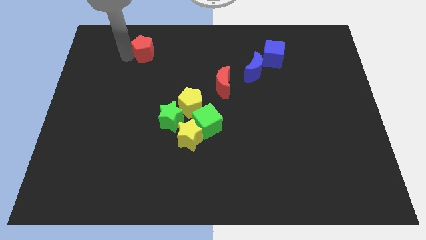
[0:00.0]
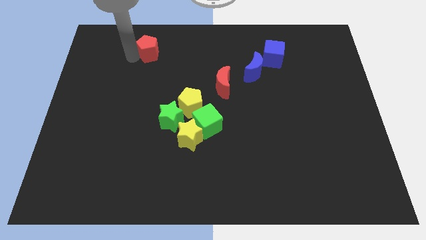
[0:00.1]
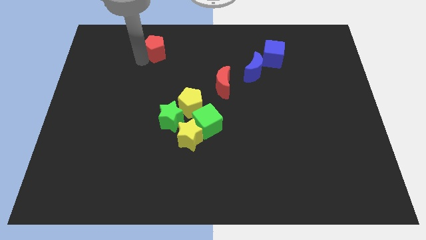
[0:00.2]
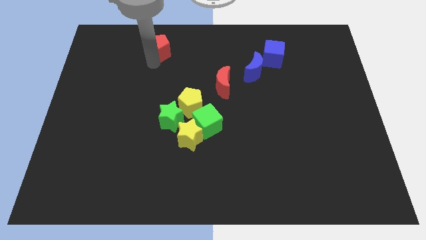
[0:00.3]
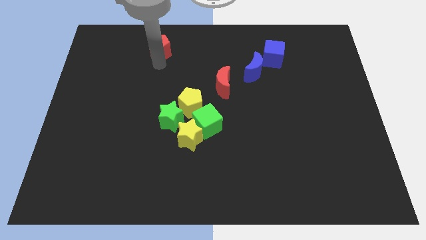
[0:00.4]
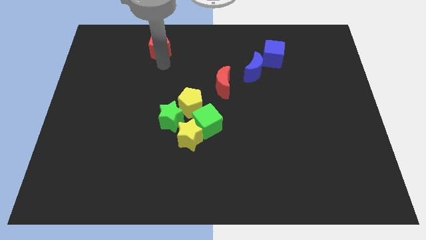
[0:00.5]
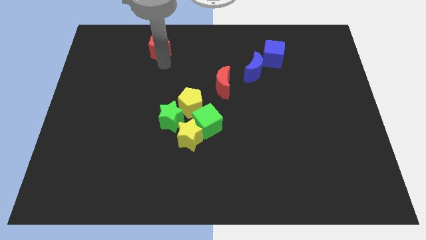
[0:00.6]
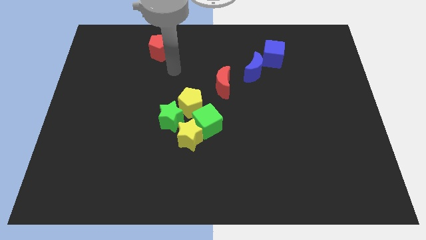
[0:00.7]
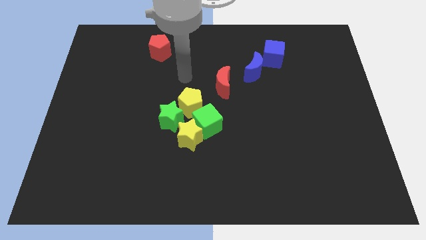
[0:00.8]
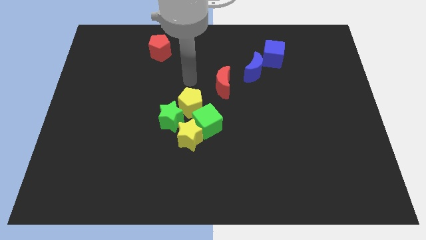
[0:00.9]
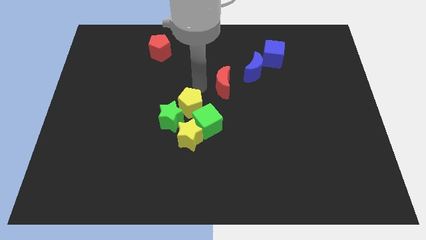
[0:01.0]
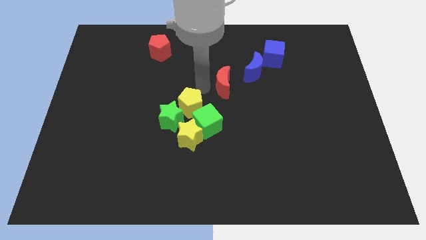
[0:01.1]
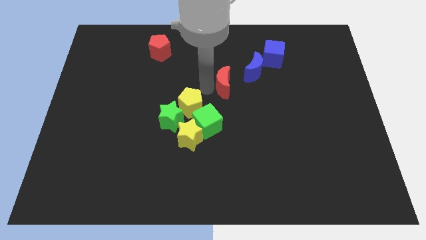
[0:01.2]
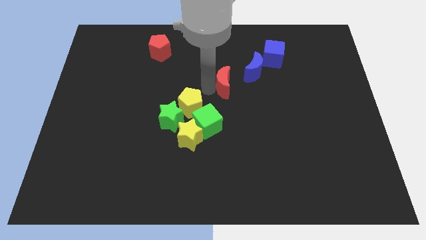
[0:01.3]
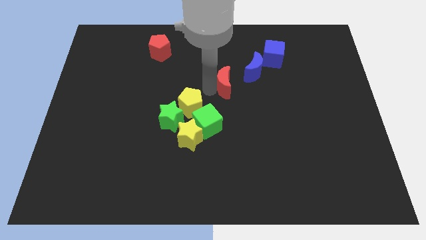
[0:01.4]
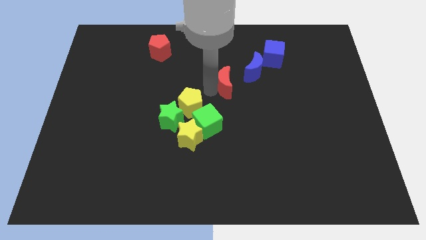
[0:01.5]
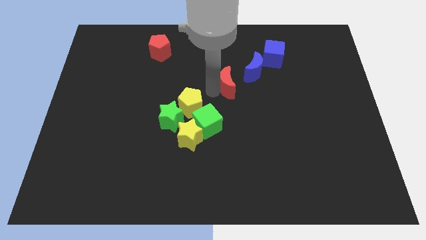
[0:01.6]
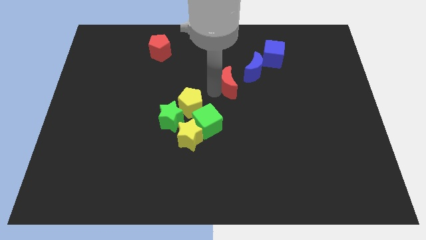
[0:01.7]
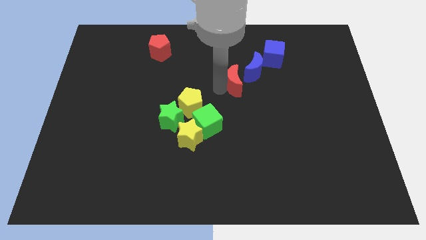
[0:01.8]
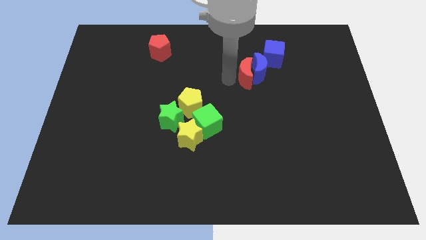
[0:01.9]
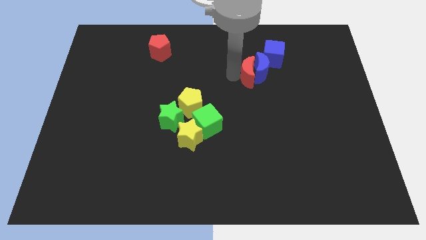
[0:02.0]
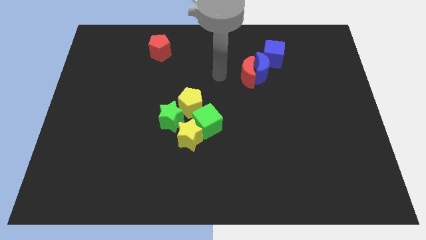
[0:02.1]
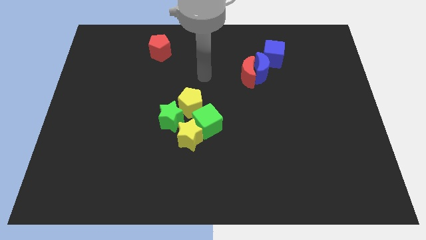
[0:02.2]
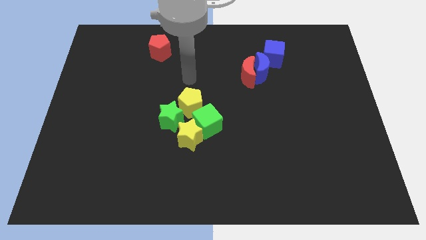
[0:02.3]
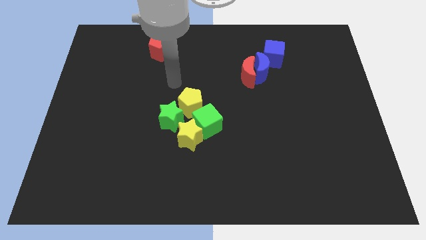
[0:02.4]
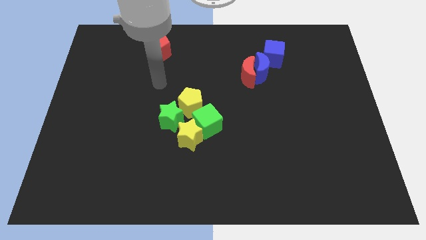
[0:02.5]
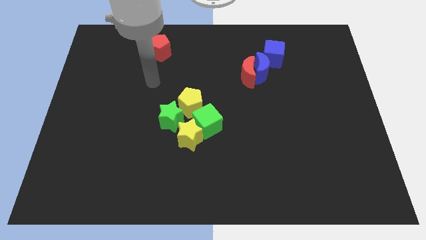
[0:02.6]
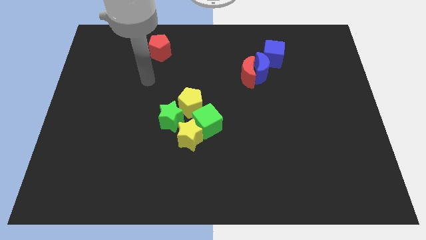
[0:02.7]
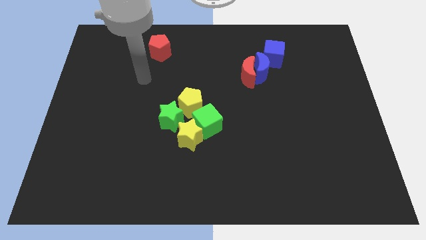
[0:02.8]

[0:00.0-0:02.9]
place red crescent to the left of blue crescent

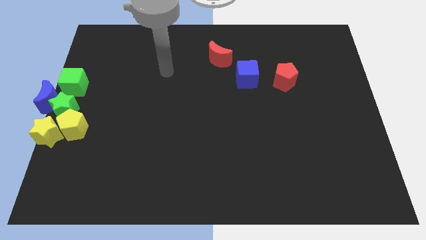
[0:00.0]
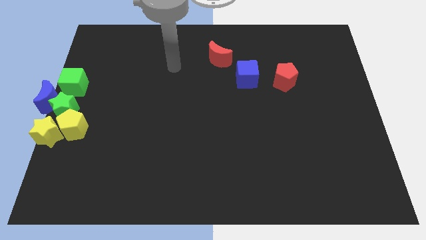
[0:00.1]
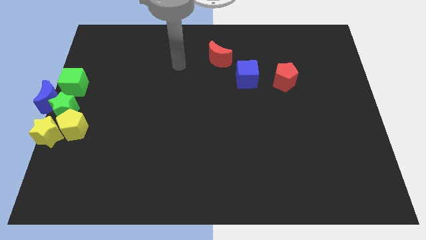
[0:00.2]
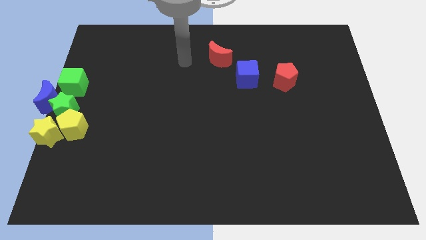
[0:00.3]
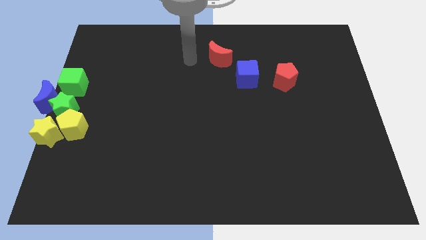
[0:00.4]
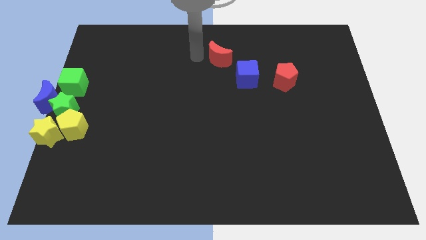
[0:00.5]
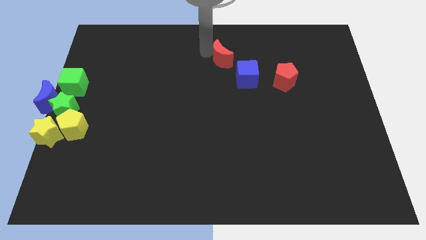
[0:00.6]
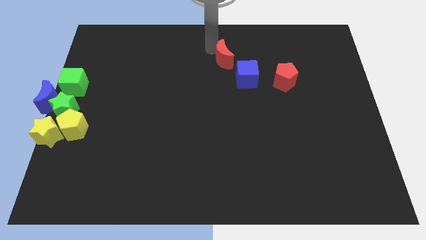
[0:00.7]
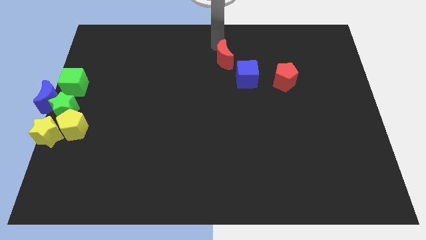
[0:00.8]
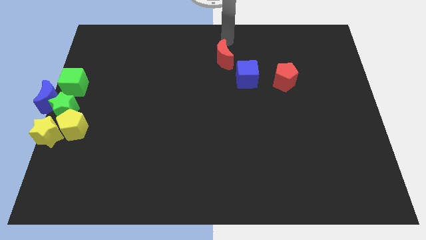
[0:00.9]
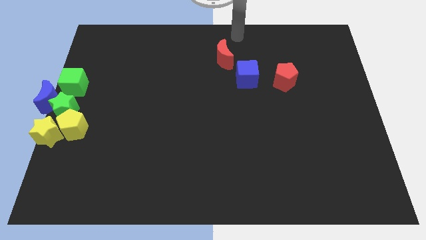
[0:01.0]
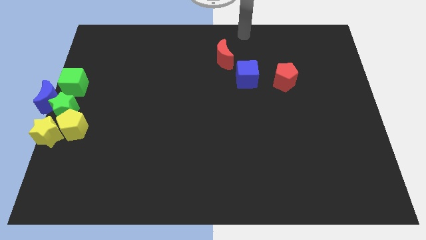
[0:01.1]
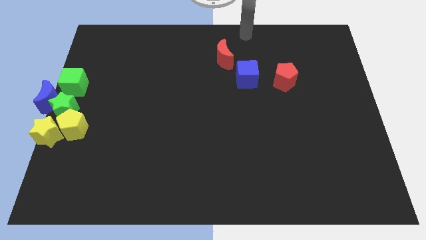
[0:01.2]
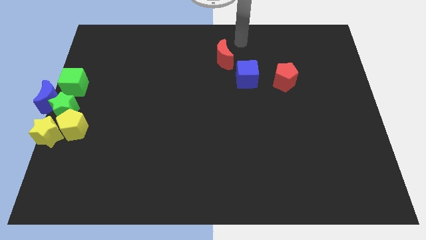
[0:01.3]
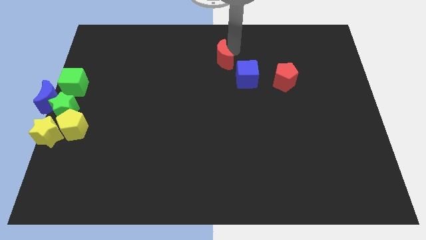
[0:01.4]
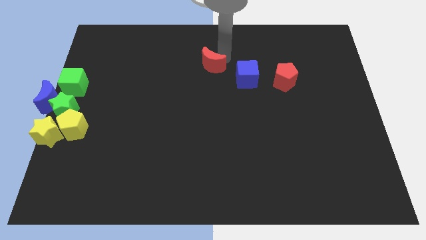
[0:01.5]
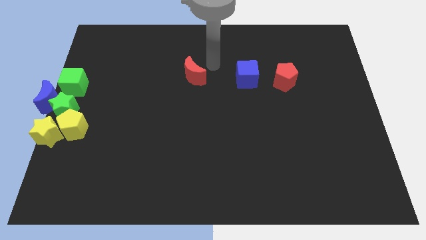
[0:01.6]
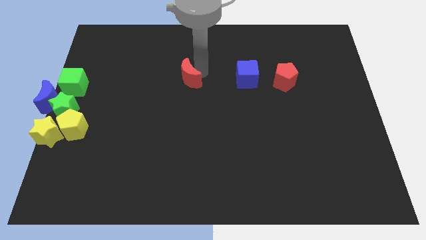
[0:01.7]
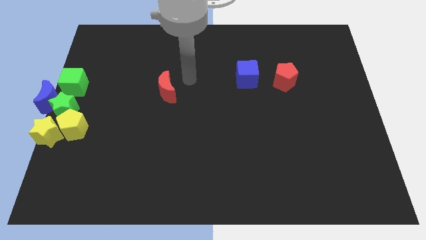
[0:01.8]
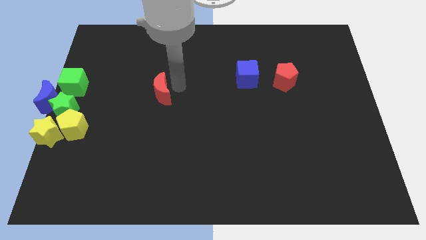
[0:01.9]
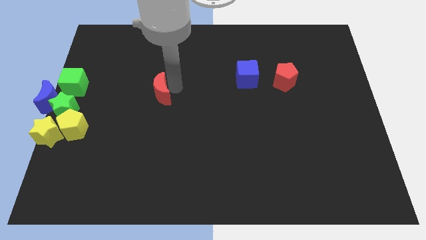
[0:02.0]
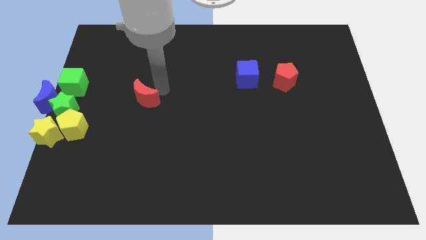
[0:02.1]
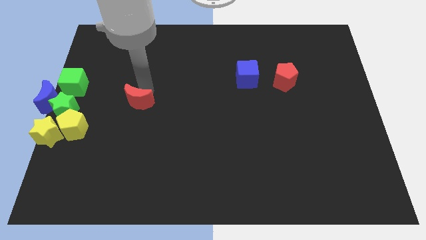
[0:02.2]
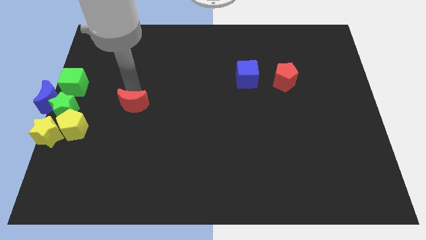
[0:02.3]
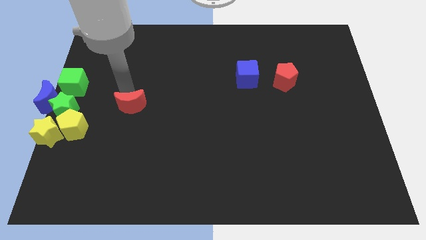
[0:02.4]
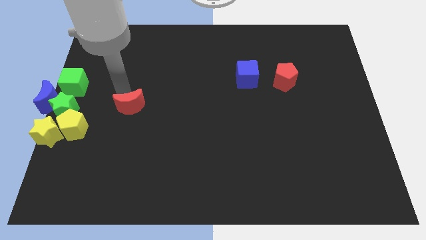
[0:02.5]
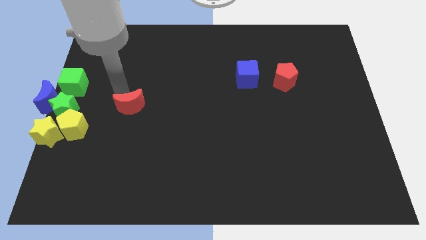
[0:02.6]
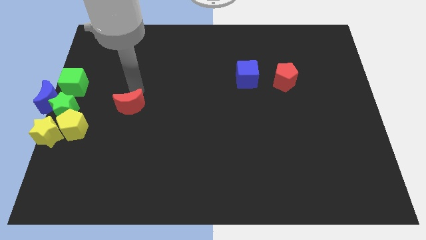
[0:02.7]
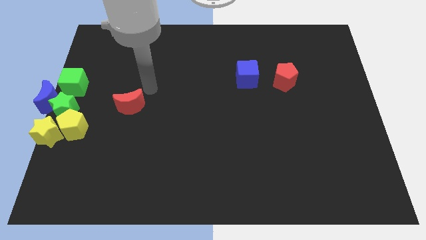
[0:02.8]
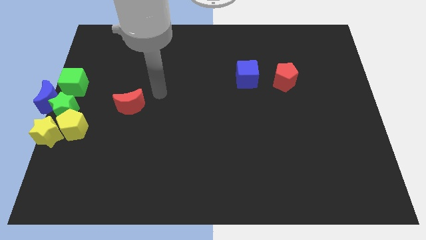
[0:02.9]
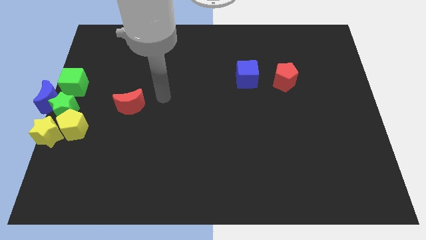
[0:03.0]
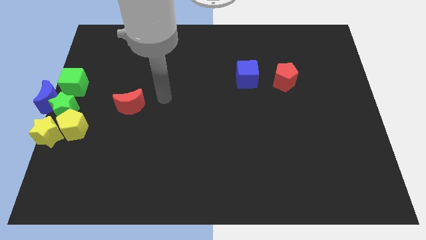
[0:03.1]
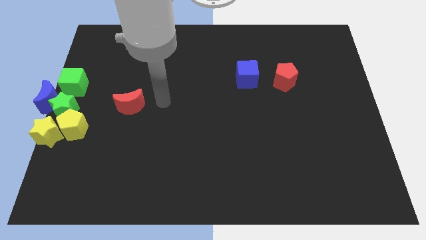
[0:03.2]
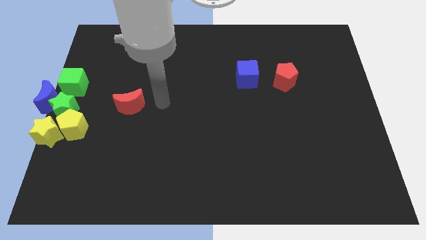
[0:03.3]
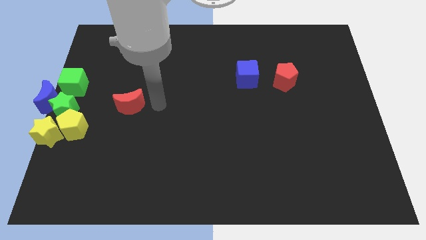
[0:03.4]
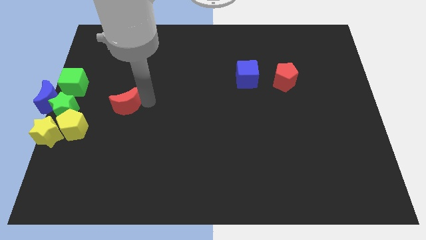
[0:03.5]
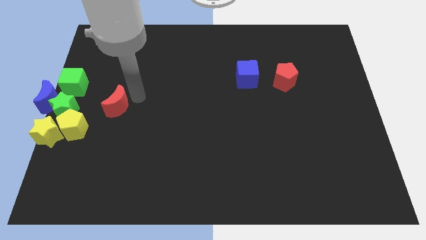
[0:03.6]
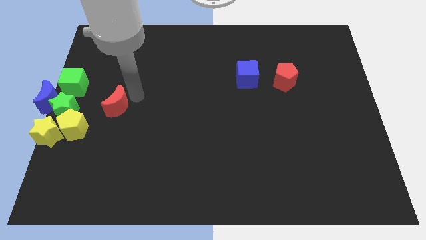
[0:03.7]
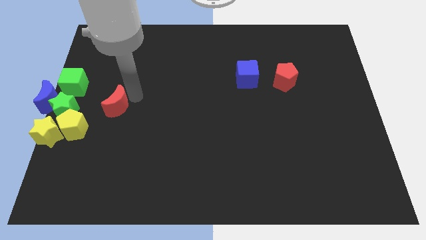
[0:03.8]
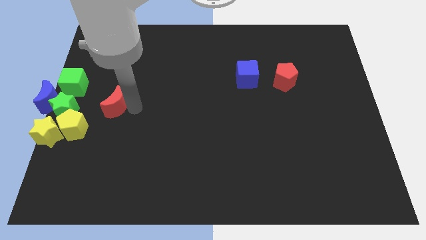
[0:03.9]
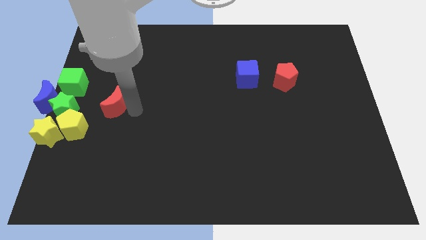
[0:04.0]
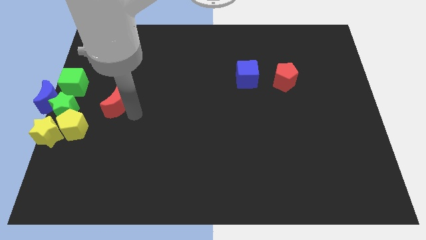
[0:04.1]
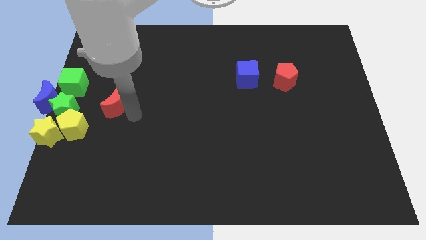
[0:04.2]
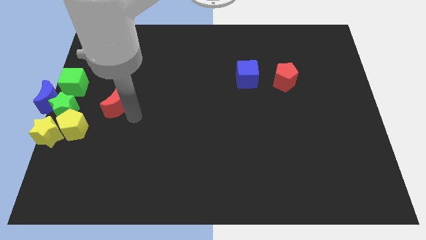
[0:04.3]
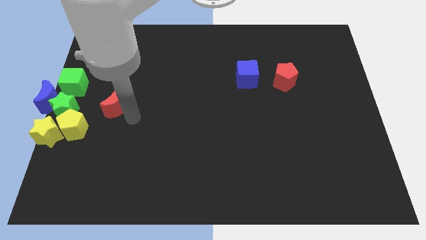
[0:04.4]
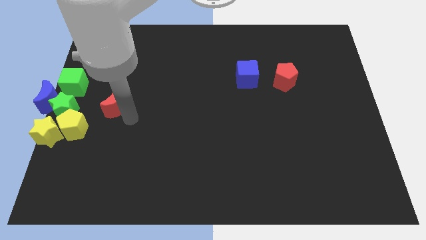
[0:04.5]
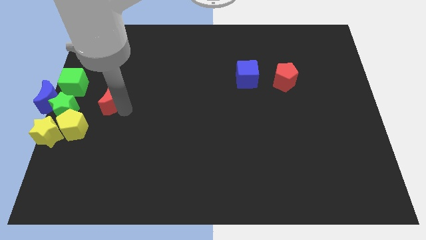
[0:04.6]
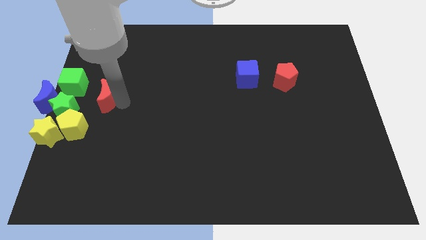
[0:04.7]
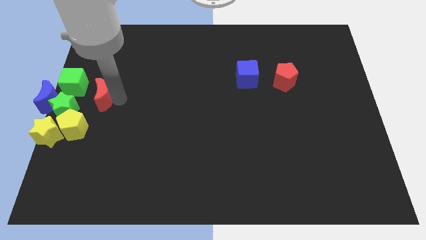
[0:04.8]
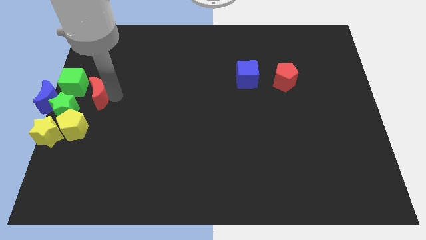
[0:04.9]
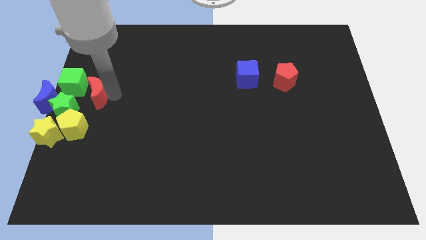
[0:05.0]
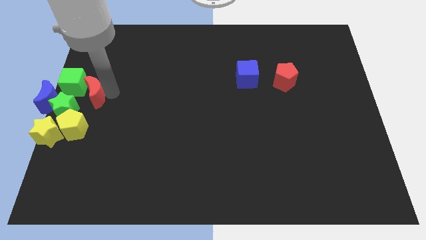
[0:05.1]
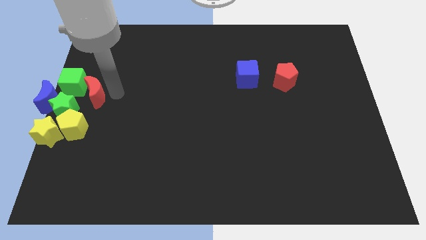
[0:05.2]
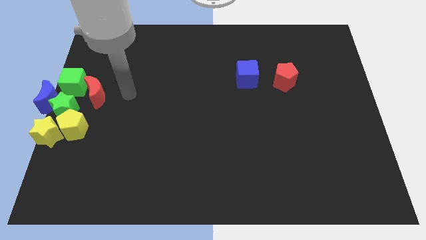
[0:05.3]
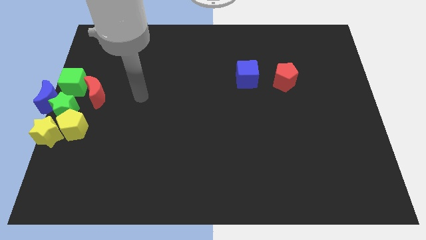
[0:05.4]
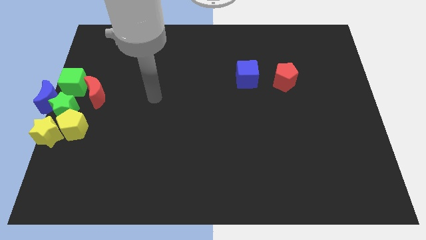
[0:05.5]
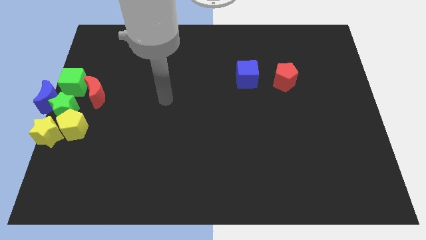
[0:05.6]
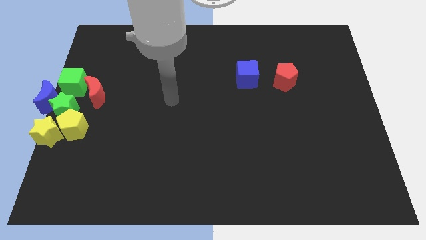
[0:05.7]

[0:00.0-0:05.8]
place the red moon right side of the green cube
